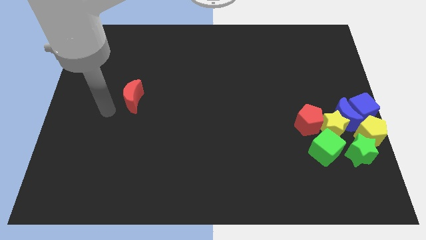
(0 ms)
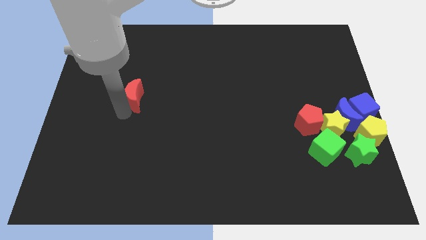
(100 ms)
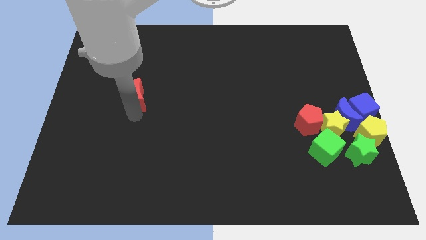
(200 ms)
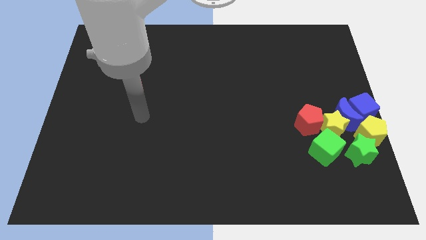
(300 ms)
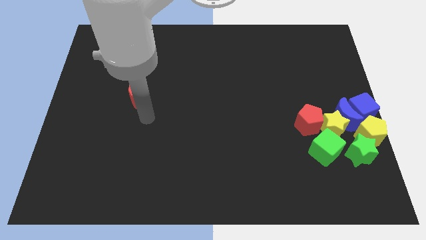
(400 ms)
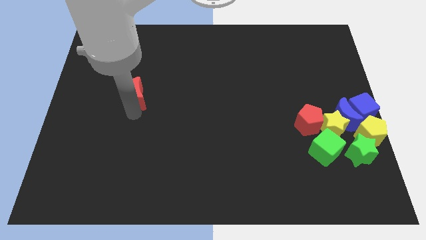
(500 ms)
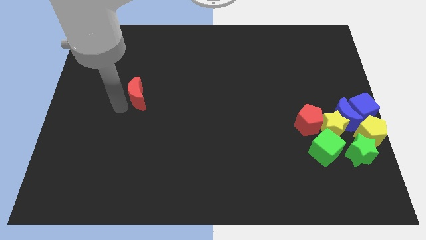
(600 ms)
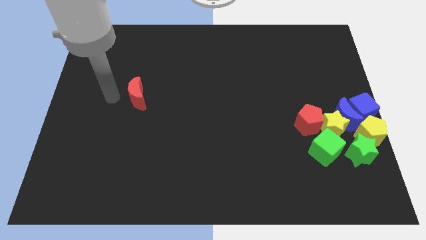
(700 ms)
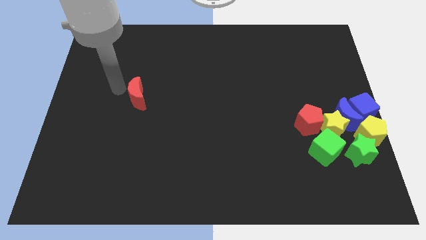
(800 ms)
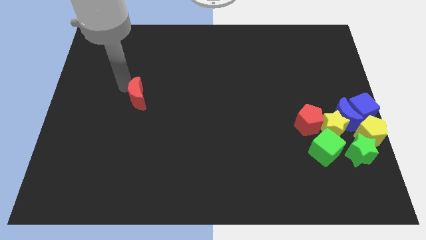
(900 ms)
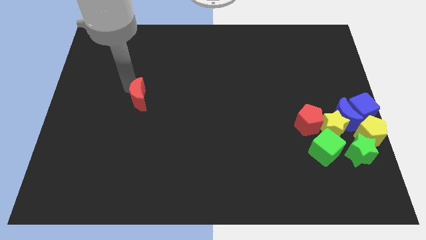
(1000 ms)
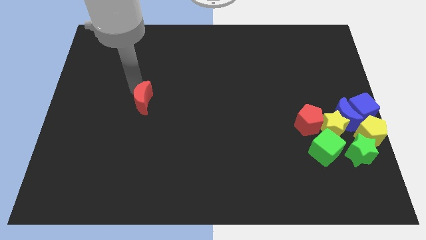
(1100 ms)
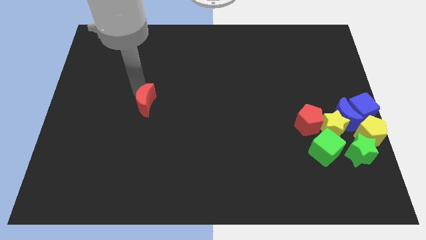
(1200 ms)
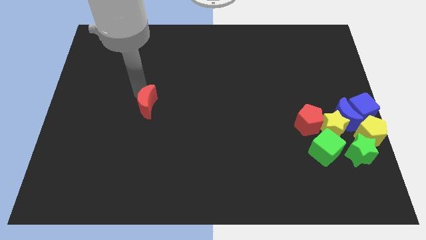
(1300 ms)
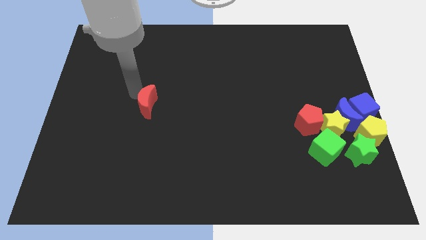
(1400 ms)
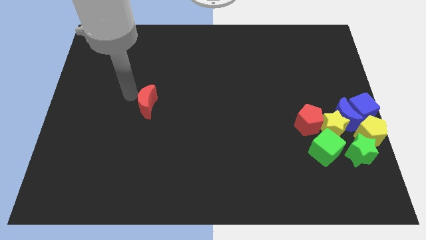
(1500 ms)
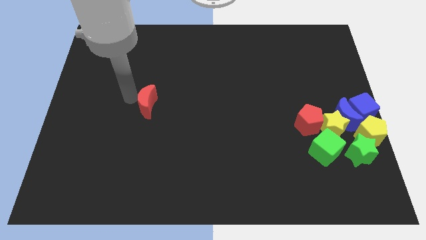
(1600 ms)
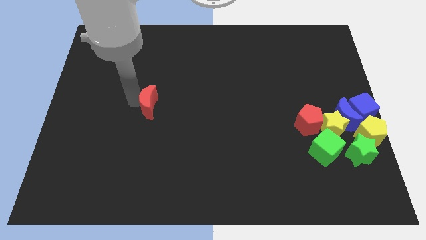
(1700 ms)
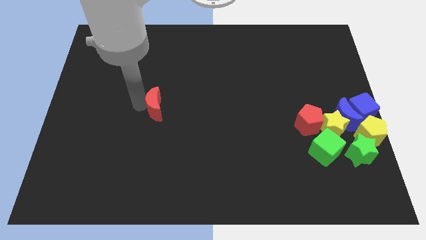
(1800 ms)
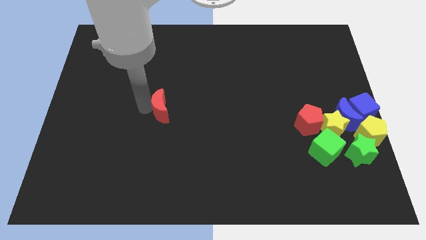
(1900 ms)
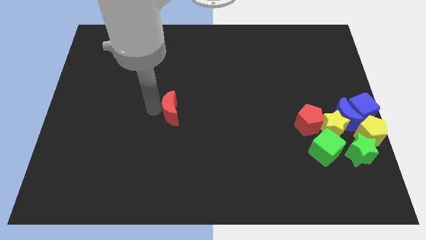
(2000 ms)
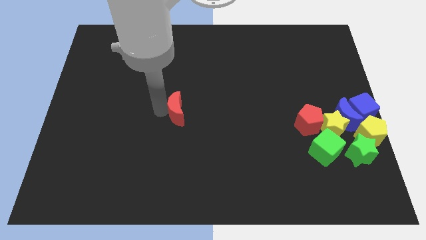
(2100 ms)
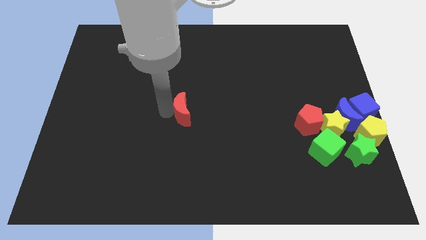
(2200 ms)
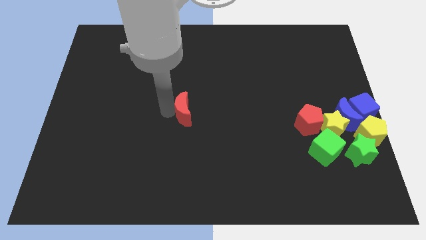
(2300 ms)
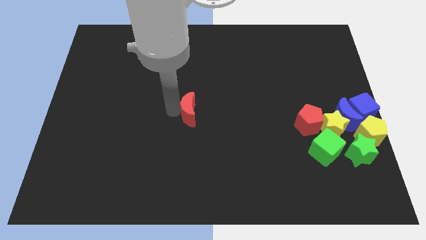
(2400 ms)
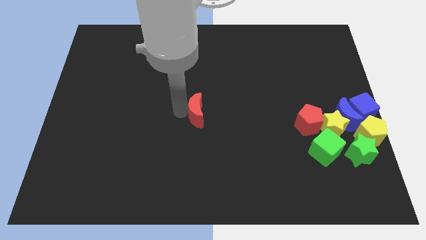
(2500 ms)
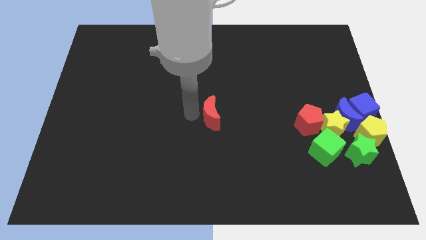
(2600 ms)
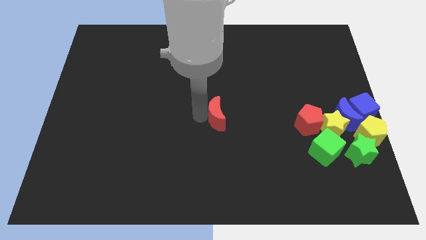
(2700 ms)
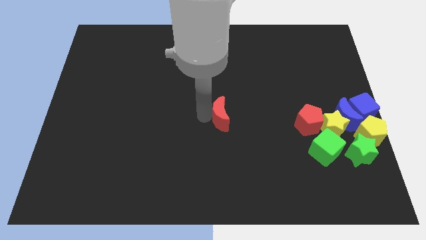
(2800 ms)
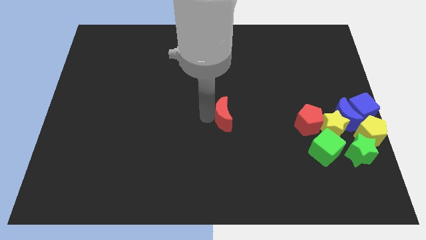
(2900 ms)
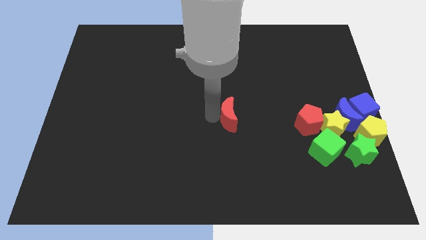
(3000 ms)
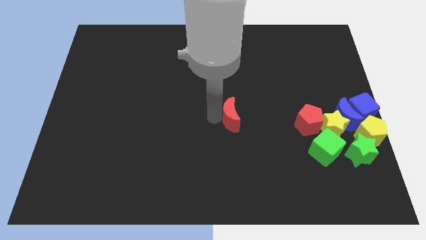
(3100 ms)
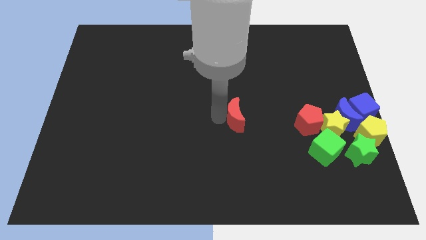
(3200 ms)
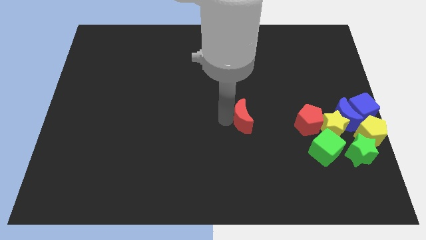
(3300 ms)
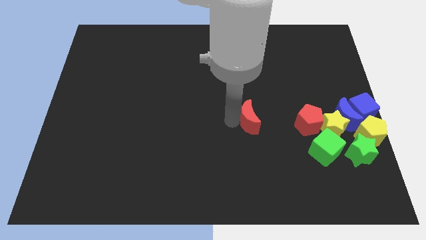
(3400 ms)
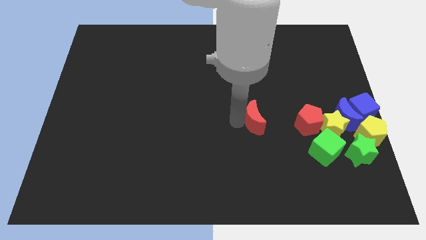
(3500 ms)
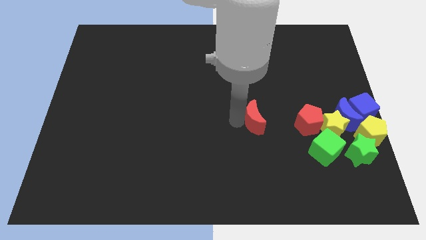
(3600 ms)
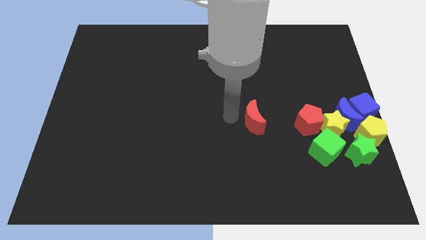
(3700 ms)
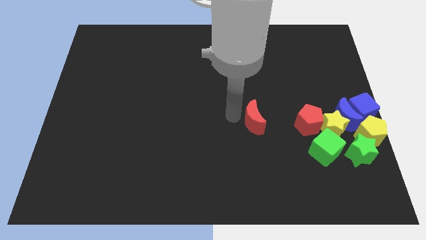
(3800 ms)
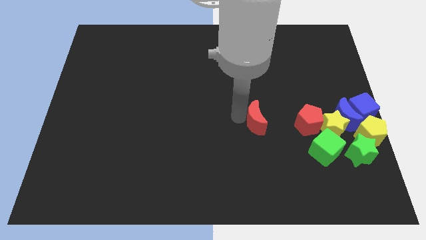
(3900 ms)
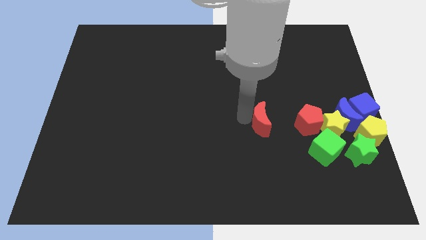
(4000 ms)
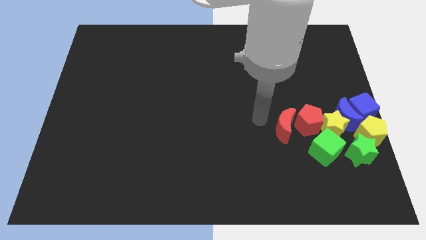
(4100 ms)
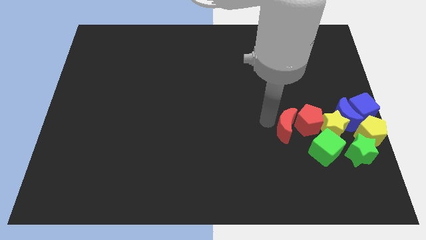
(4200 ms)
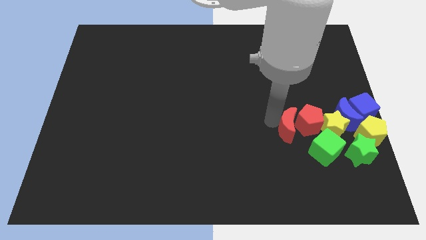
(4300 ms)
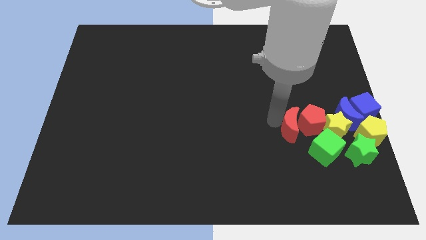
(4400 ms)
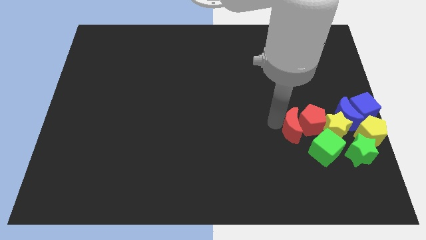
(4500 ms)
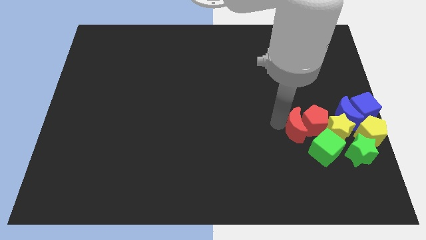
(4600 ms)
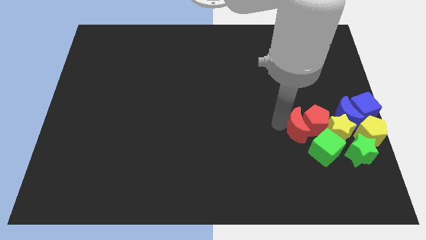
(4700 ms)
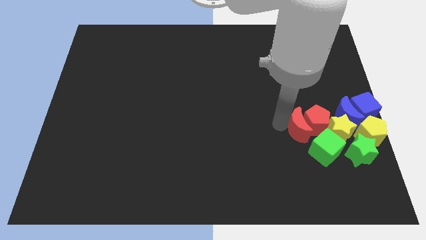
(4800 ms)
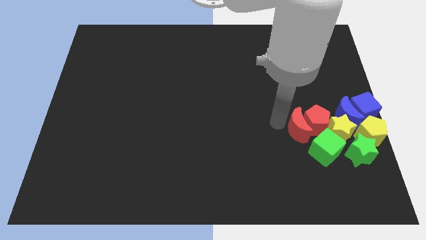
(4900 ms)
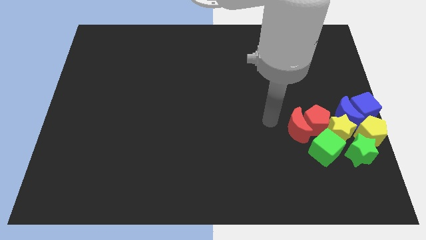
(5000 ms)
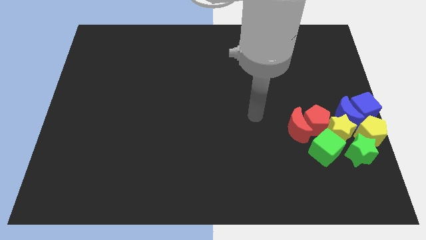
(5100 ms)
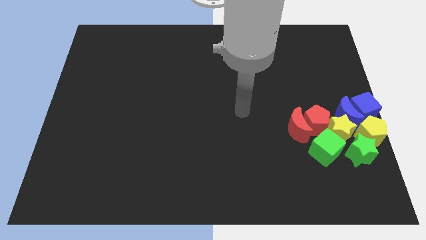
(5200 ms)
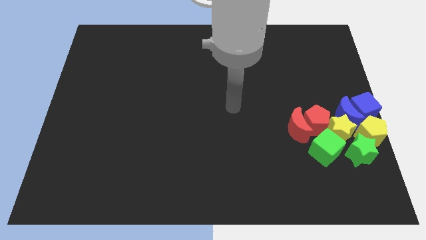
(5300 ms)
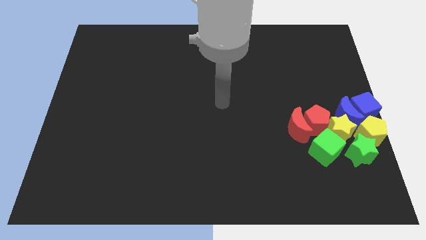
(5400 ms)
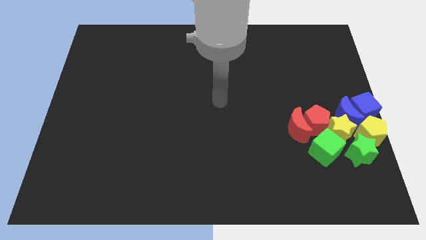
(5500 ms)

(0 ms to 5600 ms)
move the red crescent into the red pentagon

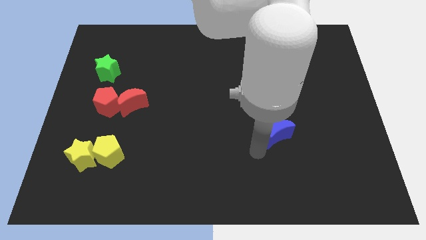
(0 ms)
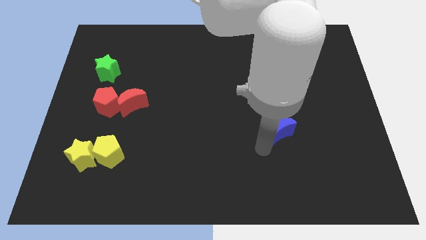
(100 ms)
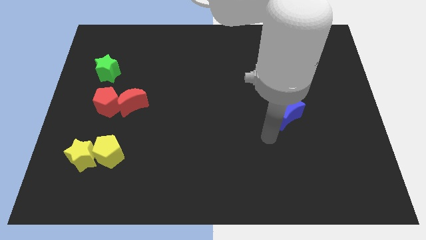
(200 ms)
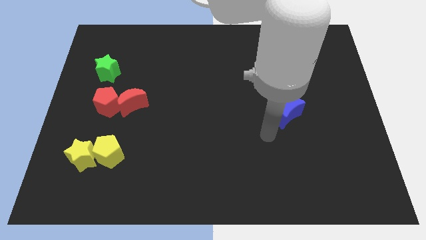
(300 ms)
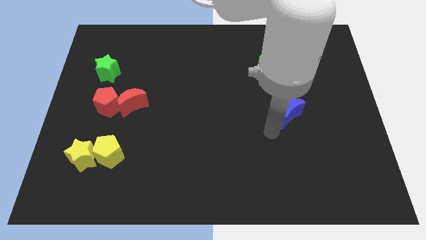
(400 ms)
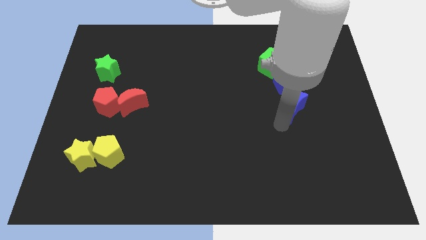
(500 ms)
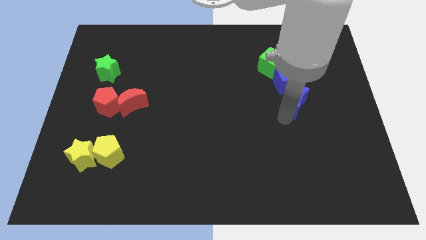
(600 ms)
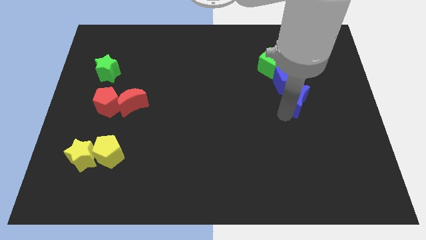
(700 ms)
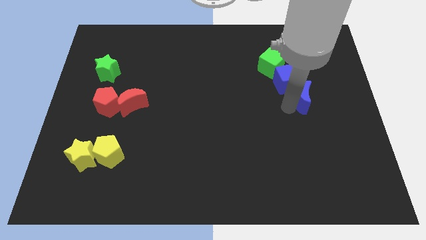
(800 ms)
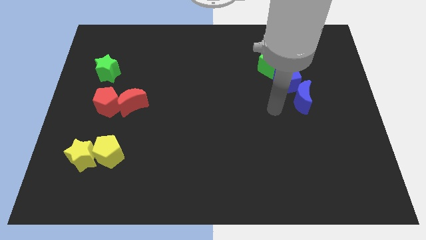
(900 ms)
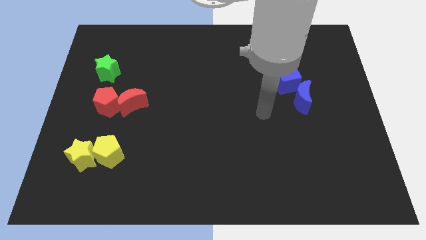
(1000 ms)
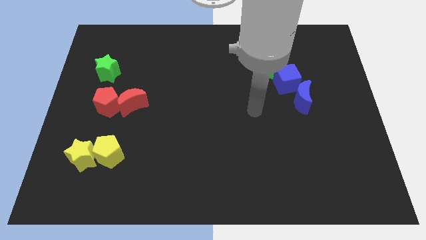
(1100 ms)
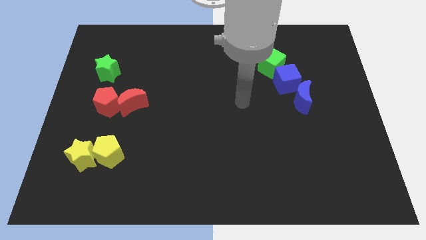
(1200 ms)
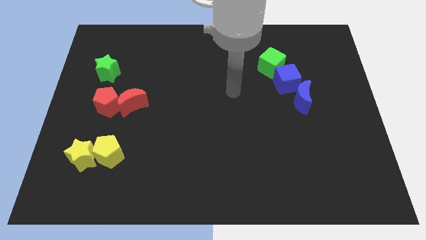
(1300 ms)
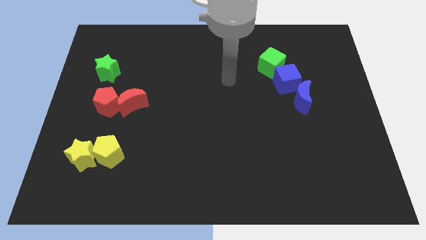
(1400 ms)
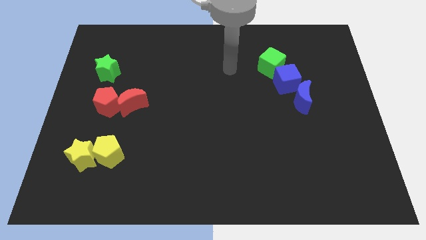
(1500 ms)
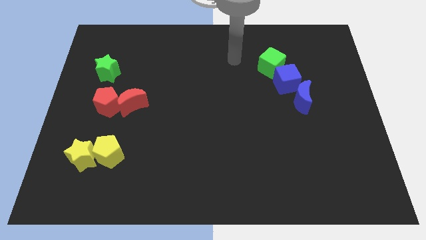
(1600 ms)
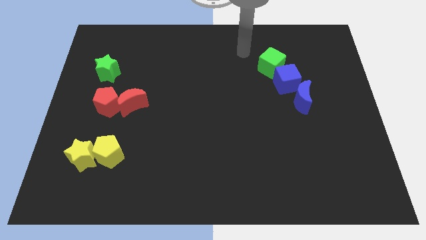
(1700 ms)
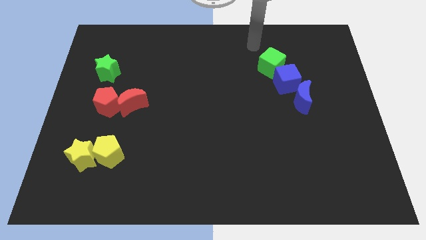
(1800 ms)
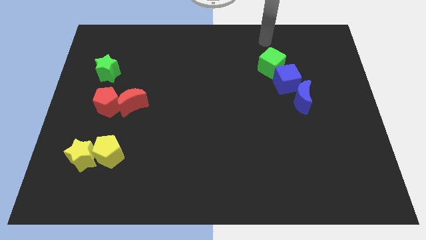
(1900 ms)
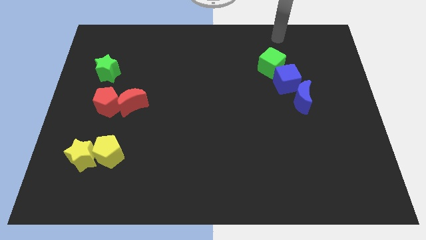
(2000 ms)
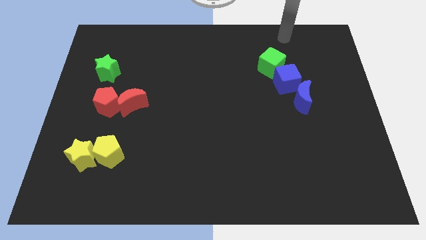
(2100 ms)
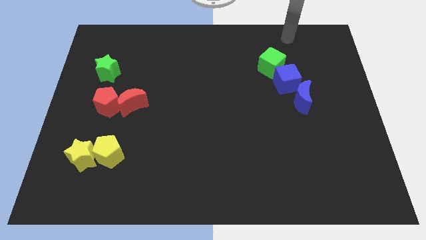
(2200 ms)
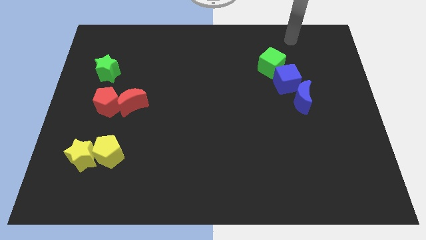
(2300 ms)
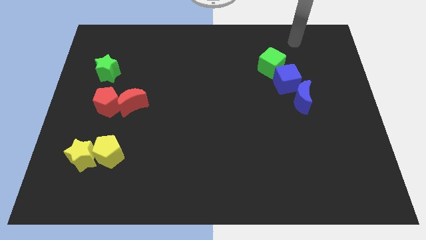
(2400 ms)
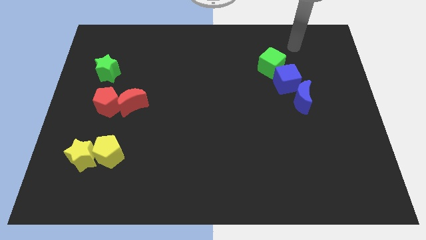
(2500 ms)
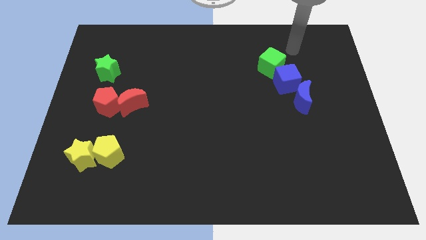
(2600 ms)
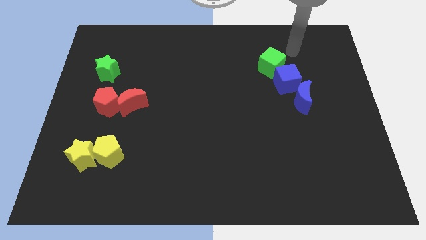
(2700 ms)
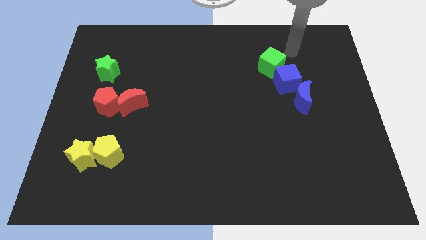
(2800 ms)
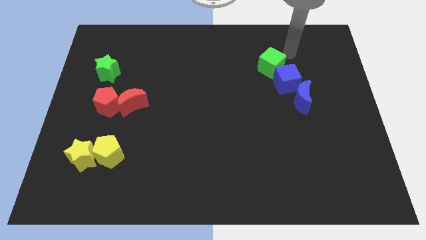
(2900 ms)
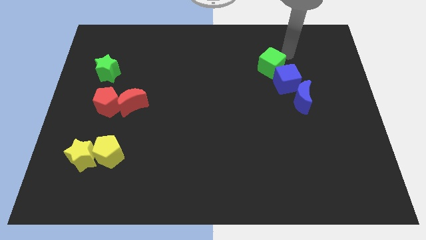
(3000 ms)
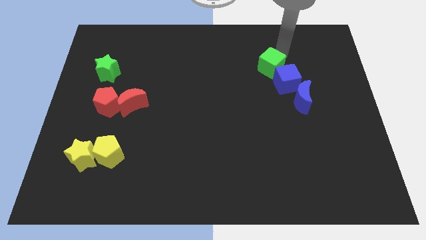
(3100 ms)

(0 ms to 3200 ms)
push the blue crescent close to the blue cube
